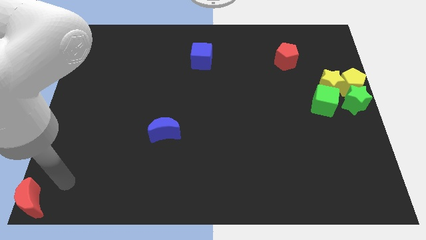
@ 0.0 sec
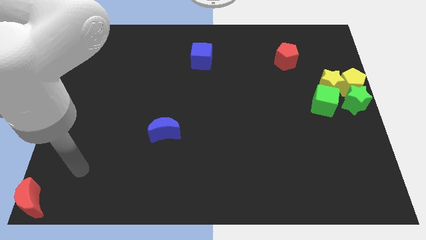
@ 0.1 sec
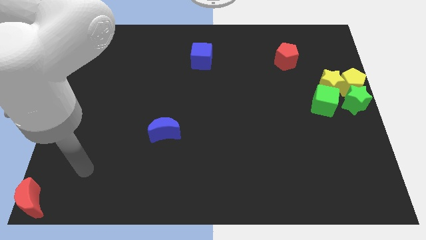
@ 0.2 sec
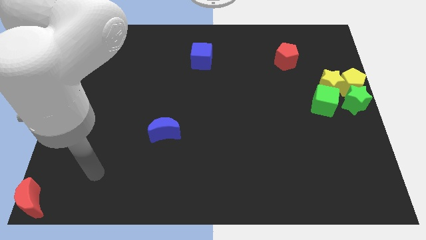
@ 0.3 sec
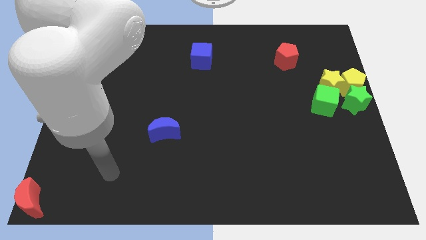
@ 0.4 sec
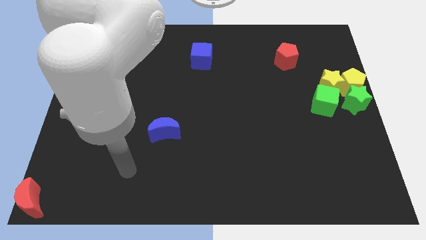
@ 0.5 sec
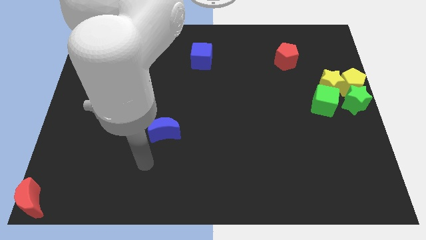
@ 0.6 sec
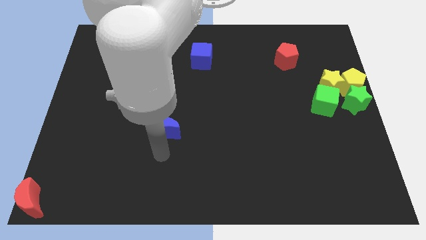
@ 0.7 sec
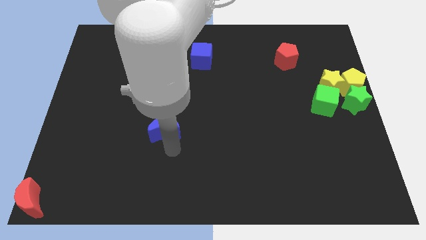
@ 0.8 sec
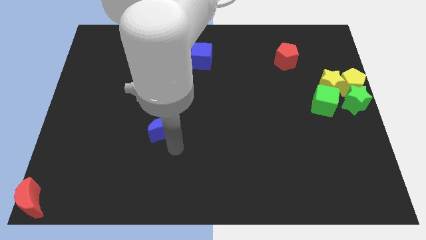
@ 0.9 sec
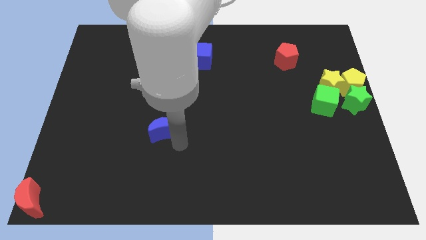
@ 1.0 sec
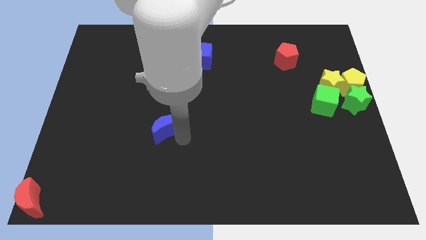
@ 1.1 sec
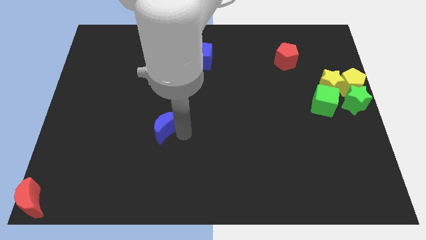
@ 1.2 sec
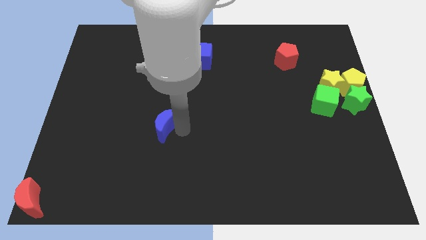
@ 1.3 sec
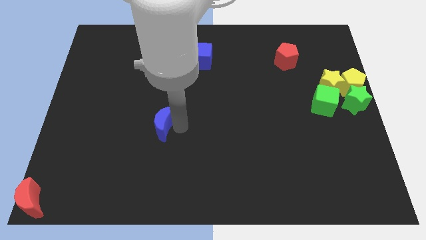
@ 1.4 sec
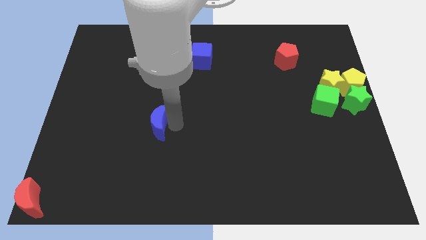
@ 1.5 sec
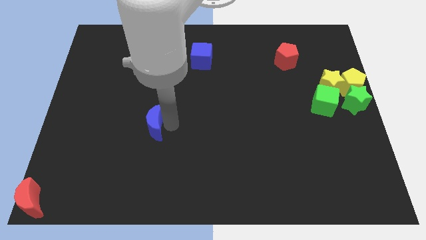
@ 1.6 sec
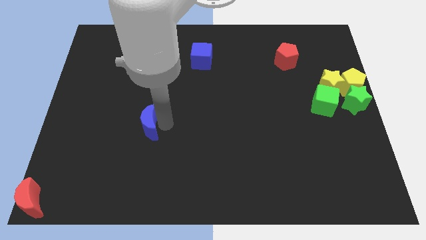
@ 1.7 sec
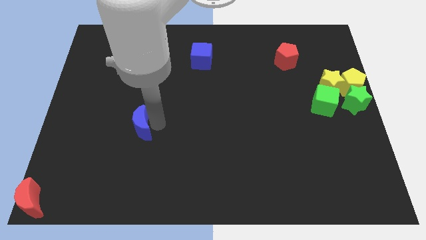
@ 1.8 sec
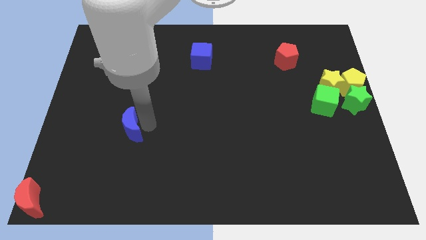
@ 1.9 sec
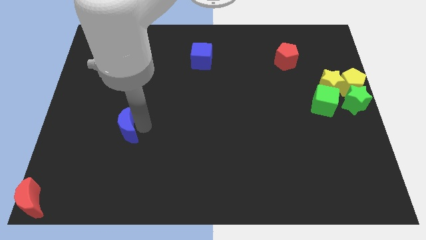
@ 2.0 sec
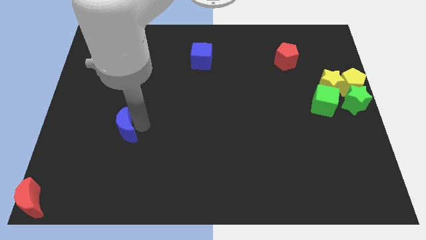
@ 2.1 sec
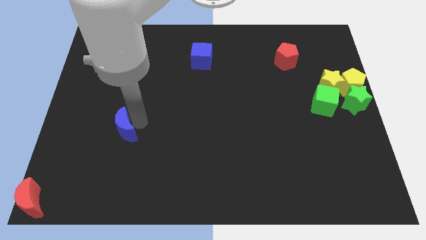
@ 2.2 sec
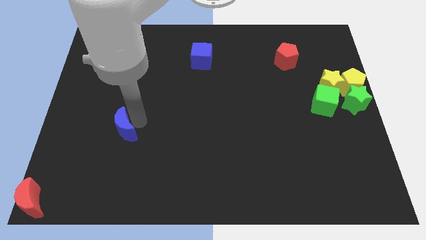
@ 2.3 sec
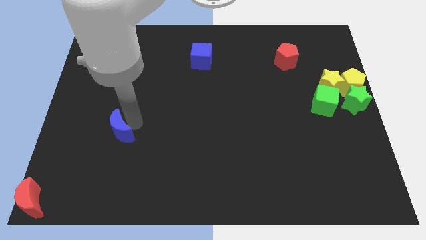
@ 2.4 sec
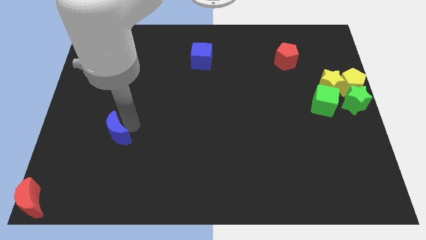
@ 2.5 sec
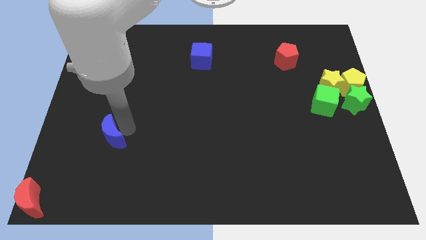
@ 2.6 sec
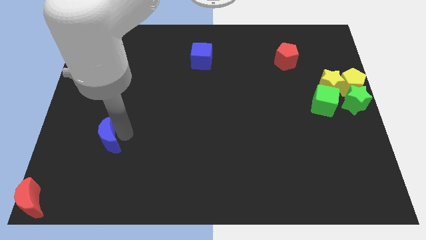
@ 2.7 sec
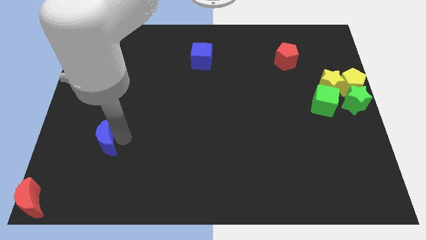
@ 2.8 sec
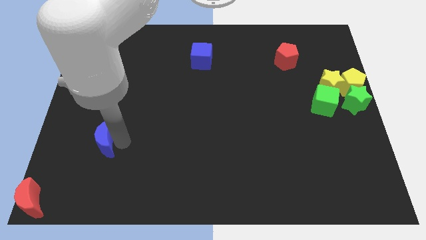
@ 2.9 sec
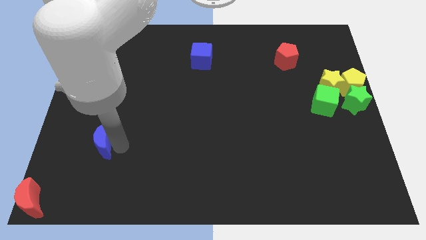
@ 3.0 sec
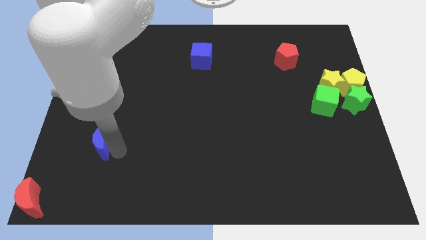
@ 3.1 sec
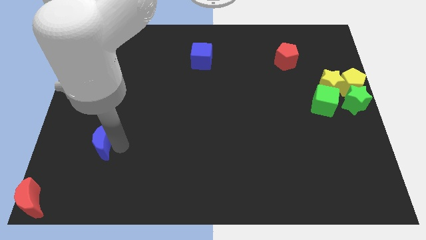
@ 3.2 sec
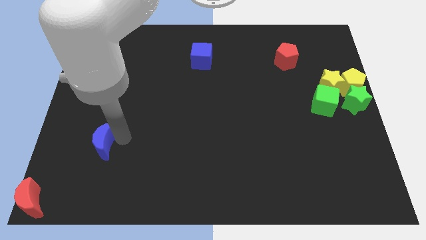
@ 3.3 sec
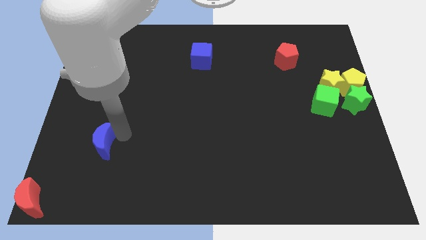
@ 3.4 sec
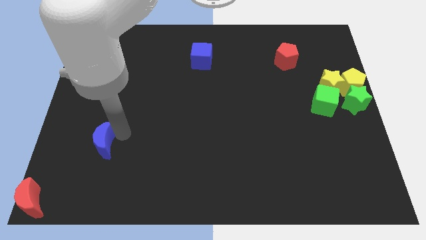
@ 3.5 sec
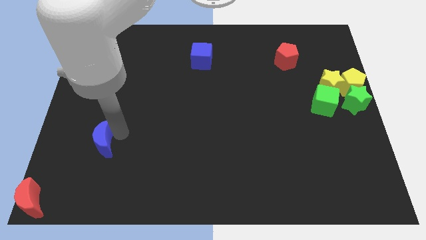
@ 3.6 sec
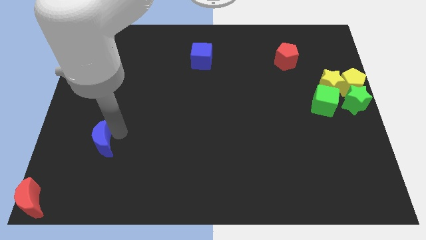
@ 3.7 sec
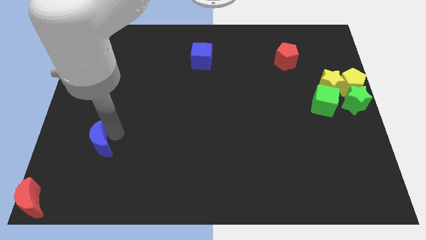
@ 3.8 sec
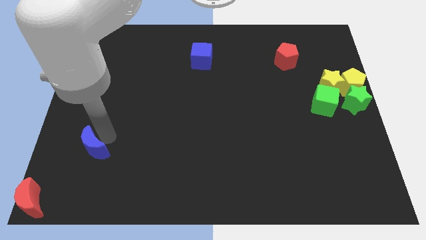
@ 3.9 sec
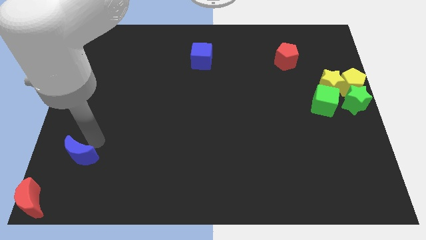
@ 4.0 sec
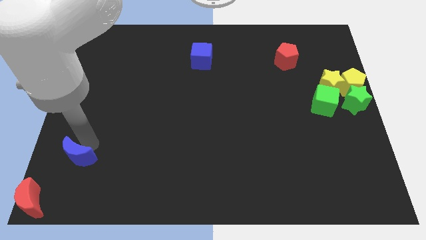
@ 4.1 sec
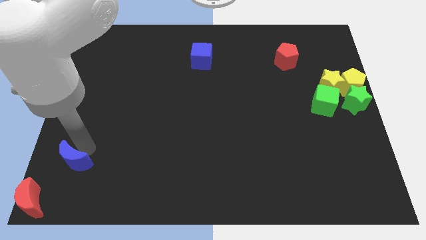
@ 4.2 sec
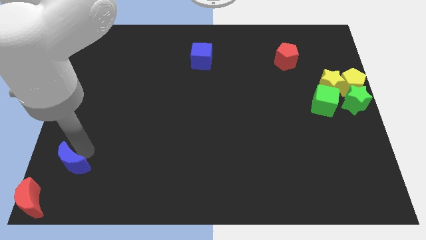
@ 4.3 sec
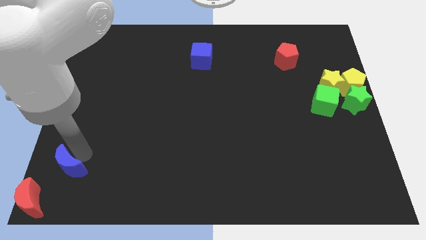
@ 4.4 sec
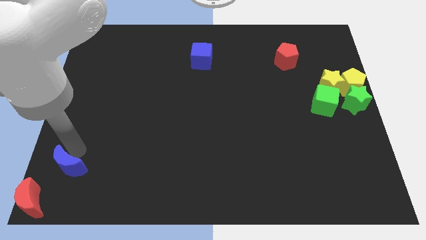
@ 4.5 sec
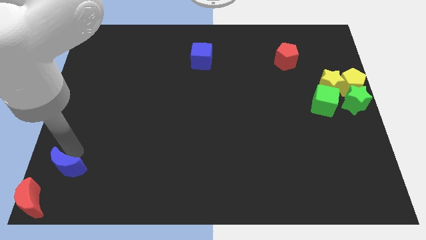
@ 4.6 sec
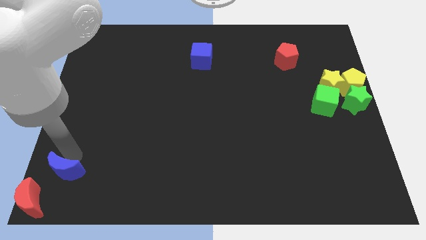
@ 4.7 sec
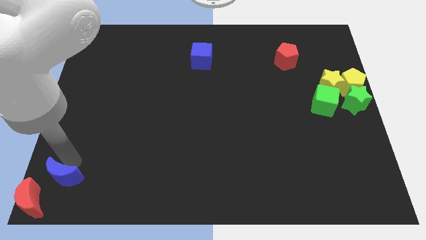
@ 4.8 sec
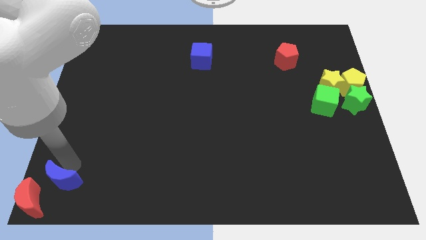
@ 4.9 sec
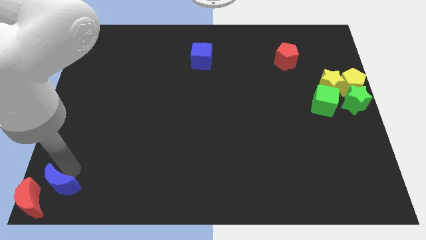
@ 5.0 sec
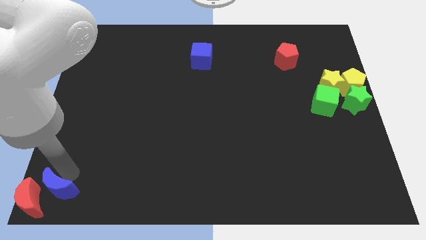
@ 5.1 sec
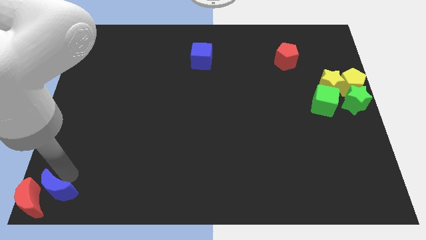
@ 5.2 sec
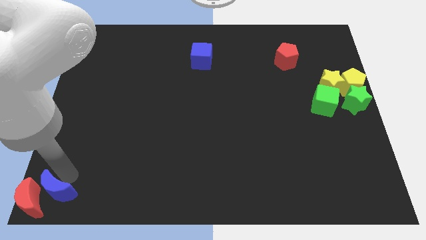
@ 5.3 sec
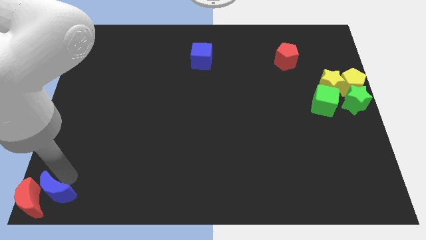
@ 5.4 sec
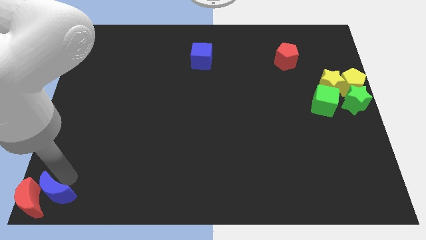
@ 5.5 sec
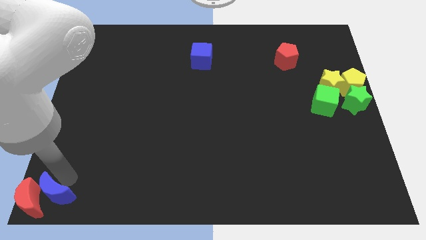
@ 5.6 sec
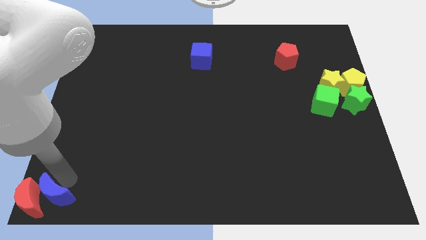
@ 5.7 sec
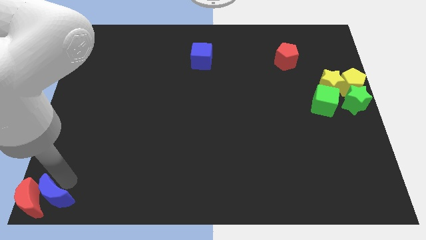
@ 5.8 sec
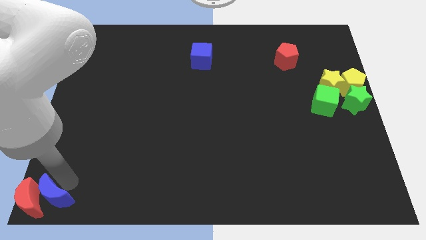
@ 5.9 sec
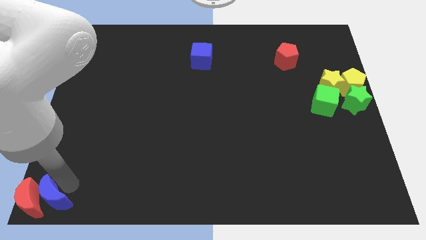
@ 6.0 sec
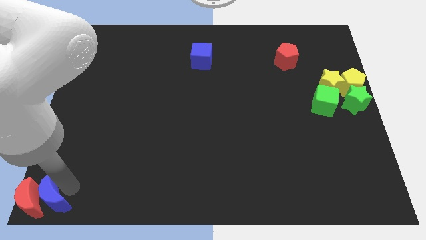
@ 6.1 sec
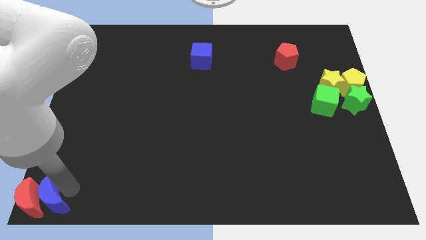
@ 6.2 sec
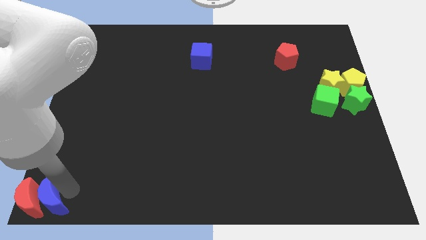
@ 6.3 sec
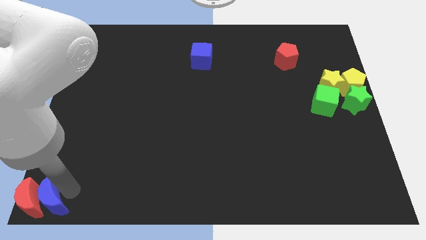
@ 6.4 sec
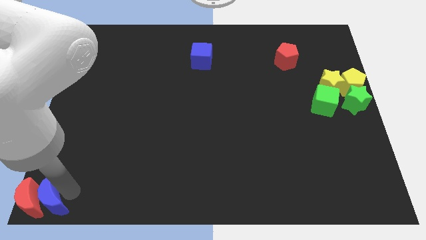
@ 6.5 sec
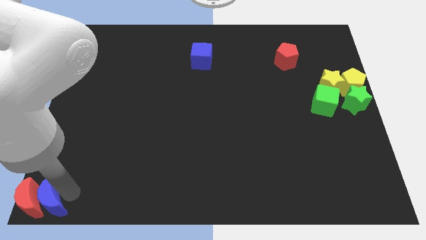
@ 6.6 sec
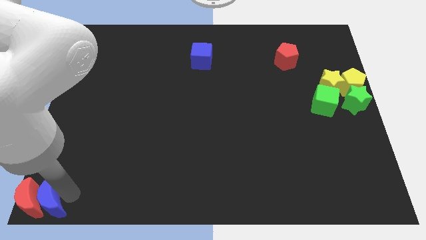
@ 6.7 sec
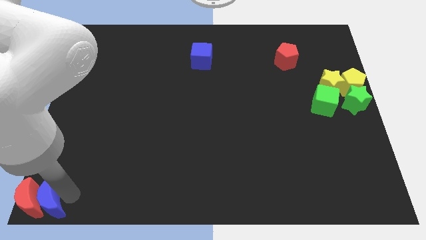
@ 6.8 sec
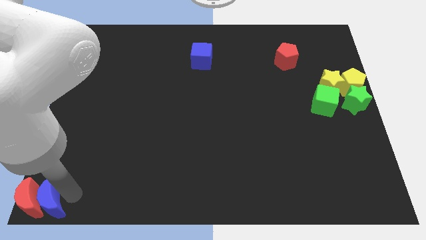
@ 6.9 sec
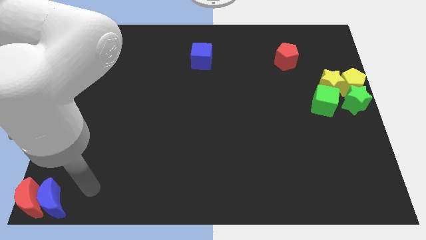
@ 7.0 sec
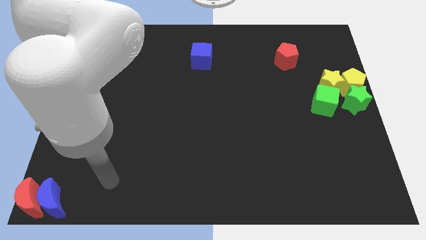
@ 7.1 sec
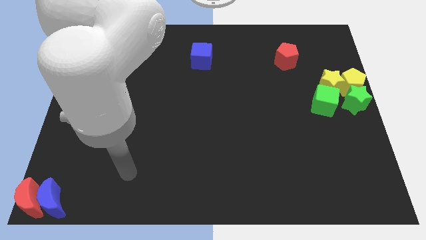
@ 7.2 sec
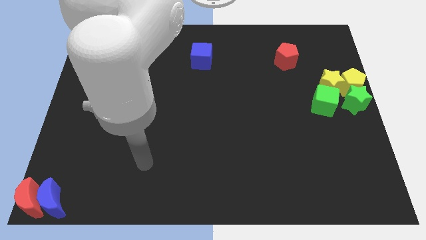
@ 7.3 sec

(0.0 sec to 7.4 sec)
place the blue moon to the right of the red moon

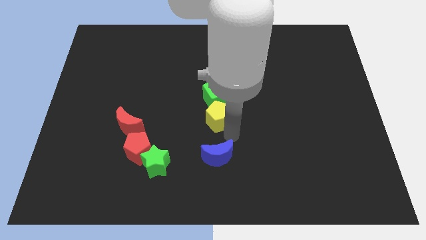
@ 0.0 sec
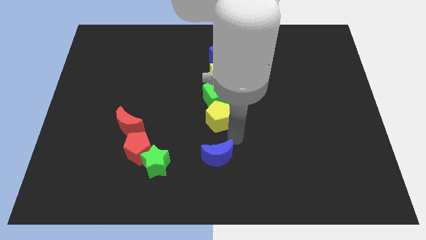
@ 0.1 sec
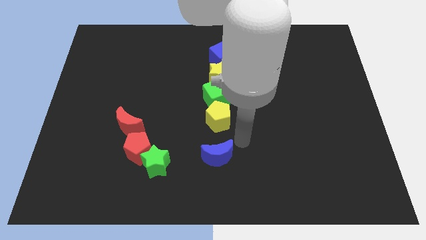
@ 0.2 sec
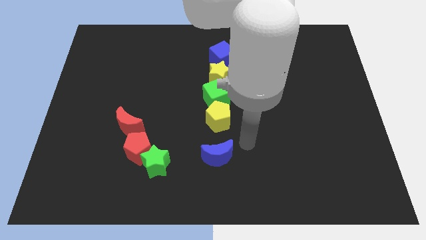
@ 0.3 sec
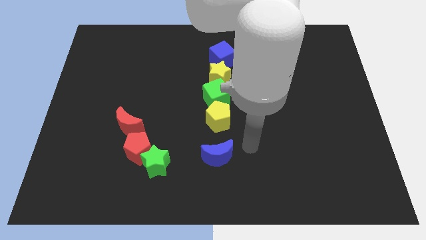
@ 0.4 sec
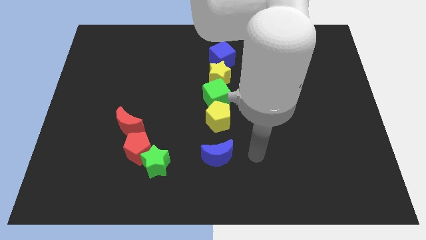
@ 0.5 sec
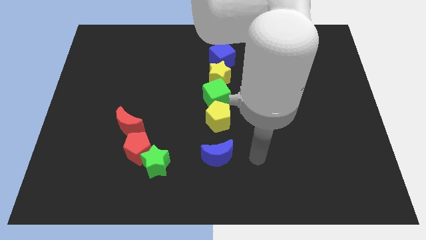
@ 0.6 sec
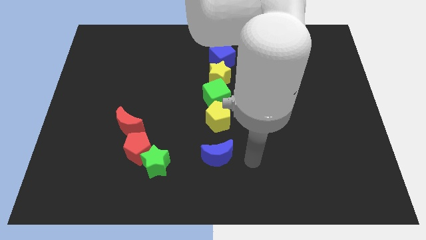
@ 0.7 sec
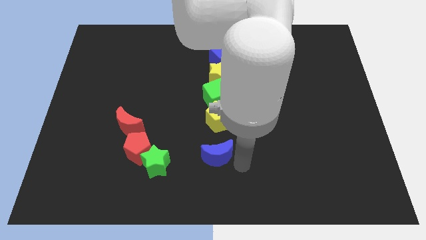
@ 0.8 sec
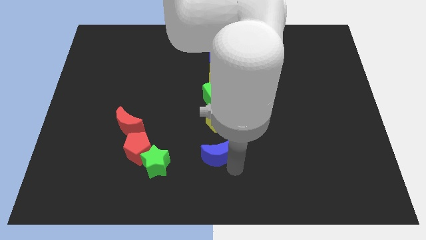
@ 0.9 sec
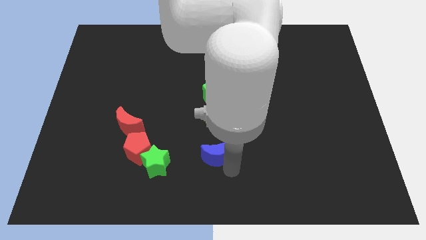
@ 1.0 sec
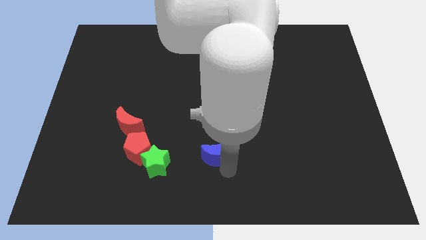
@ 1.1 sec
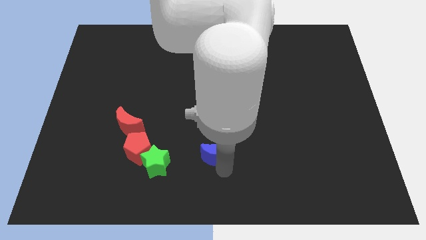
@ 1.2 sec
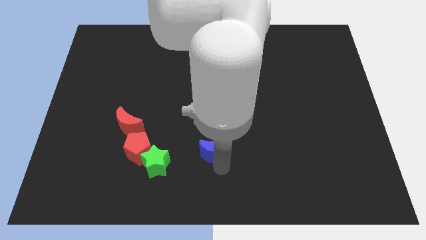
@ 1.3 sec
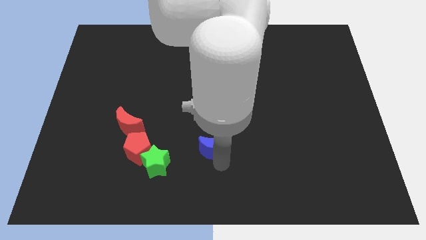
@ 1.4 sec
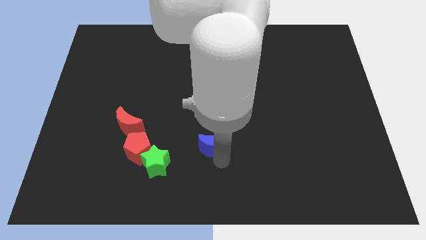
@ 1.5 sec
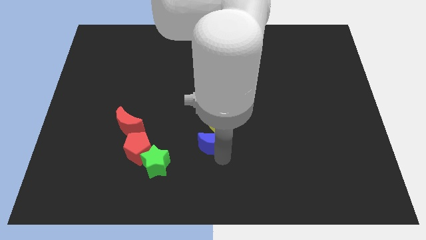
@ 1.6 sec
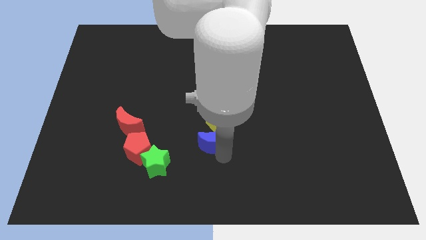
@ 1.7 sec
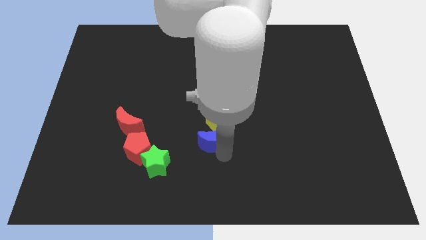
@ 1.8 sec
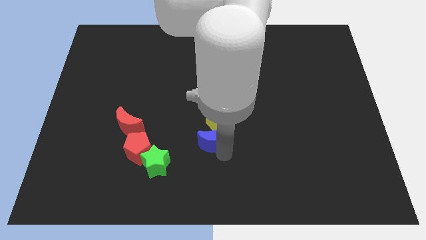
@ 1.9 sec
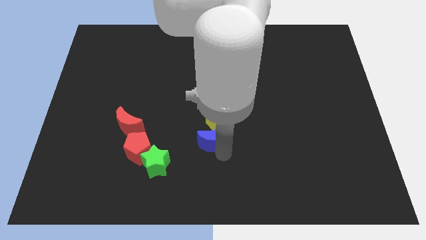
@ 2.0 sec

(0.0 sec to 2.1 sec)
move the blue crescent towards the yellow pentagon
